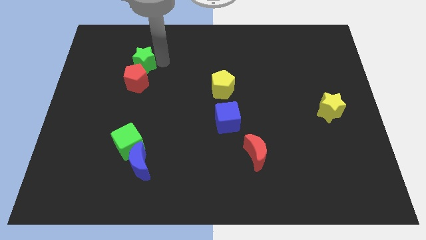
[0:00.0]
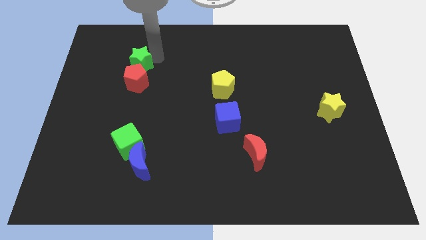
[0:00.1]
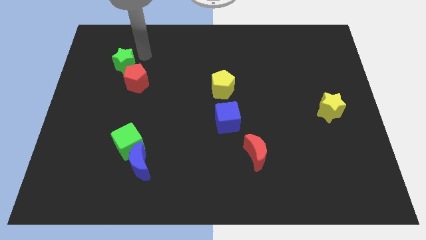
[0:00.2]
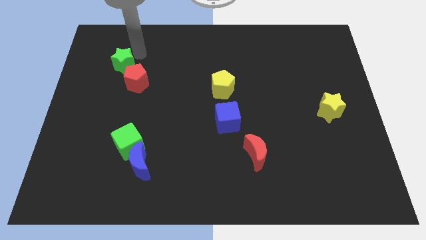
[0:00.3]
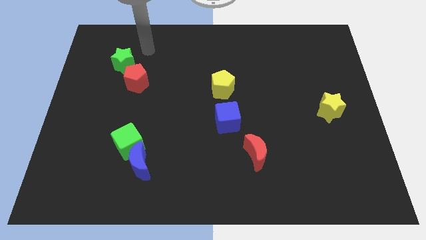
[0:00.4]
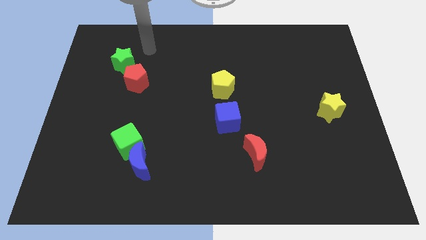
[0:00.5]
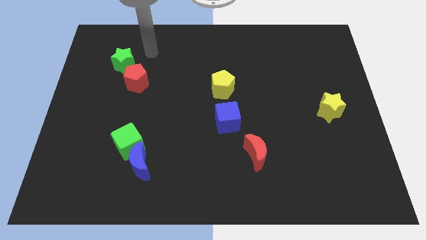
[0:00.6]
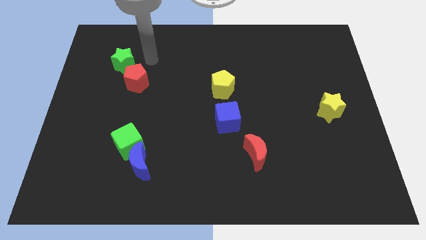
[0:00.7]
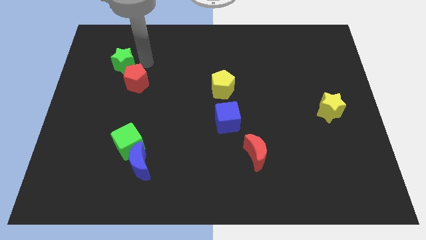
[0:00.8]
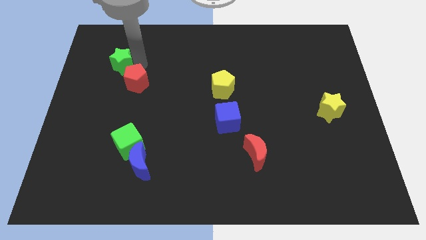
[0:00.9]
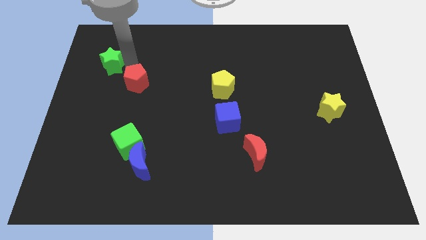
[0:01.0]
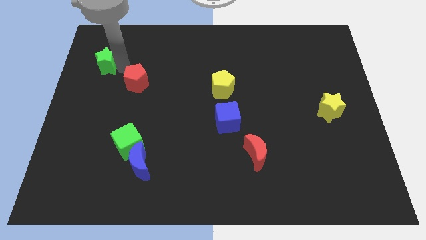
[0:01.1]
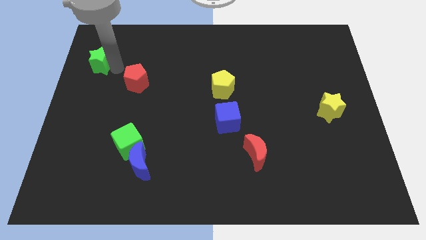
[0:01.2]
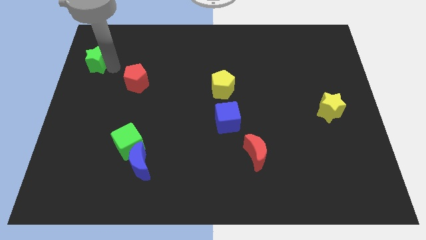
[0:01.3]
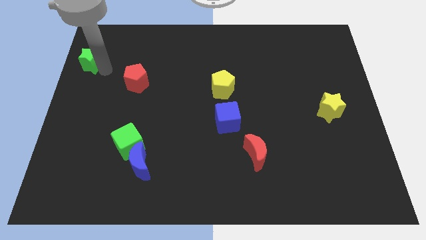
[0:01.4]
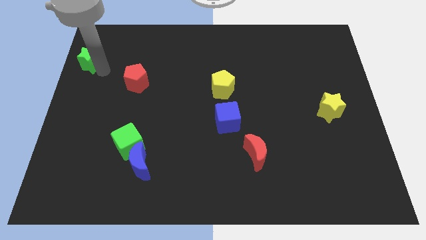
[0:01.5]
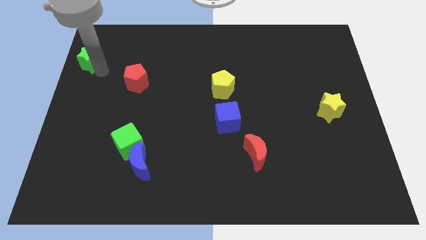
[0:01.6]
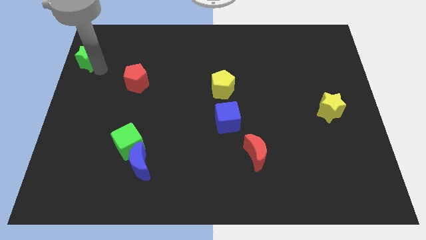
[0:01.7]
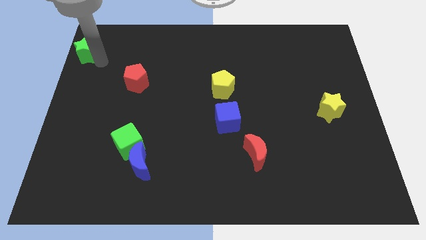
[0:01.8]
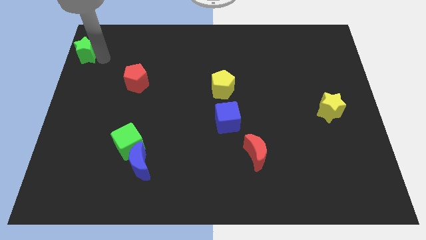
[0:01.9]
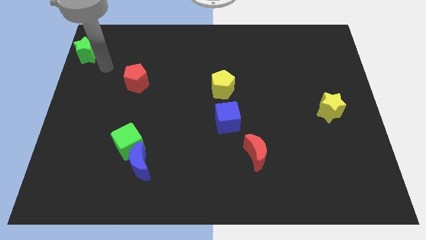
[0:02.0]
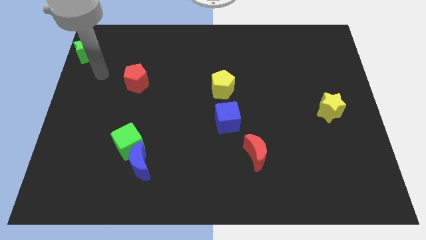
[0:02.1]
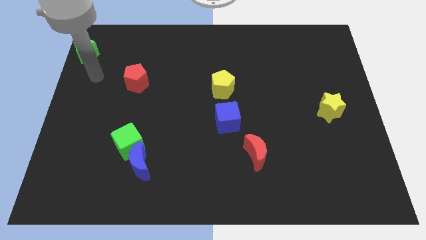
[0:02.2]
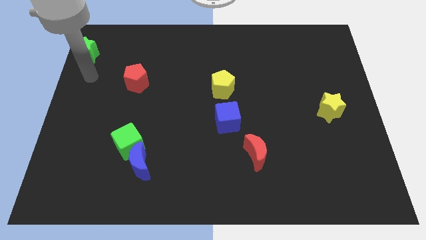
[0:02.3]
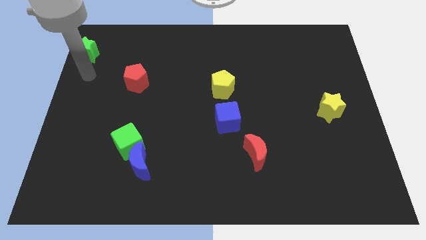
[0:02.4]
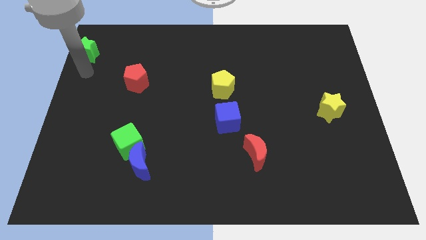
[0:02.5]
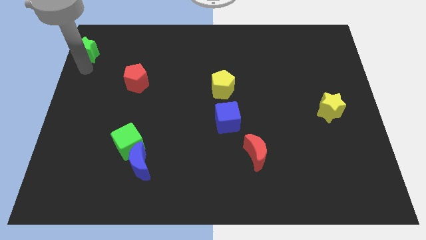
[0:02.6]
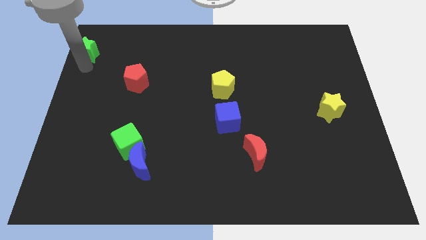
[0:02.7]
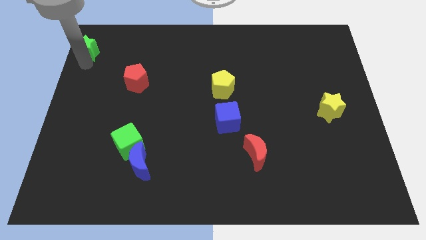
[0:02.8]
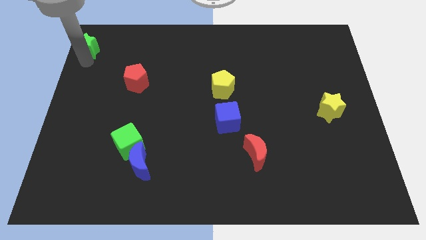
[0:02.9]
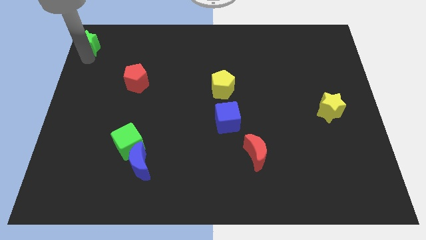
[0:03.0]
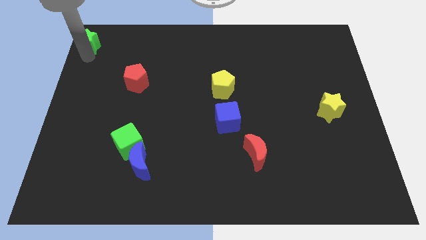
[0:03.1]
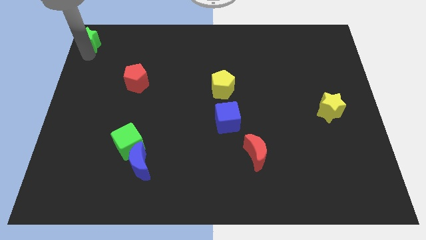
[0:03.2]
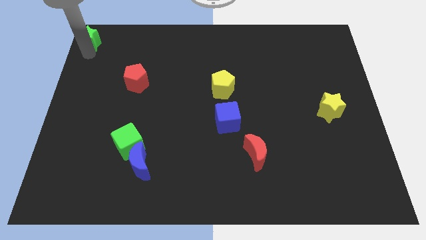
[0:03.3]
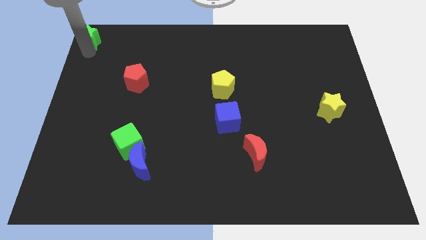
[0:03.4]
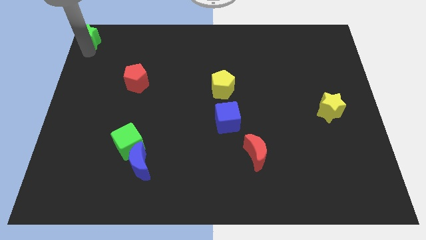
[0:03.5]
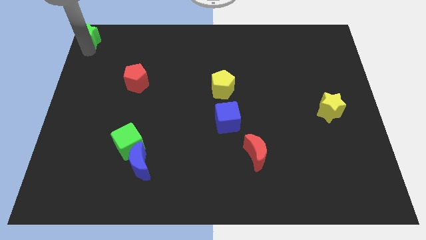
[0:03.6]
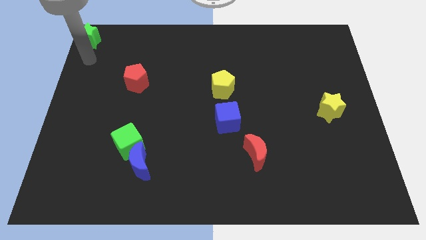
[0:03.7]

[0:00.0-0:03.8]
place the green star at the top left side of the board

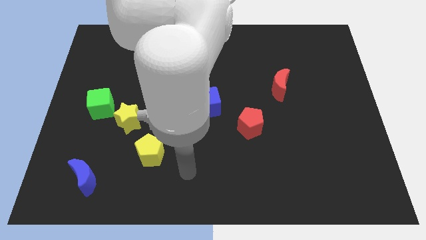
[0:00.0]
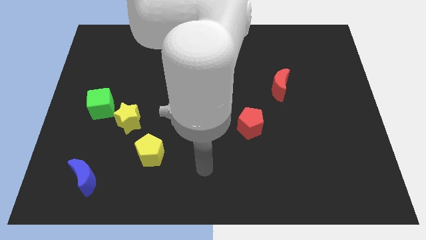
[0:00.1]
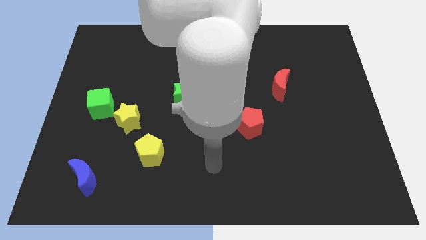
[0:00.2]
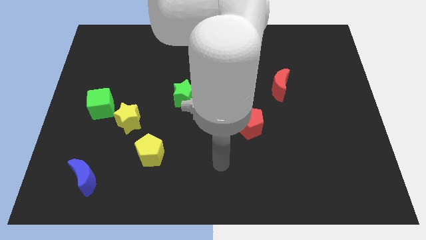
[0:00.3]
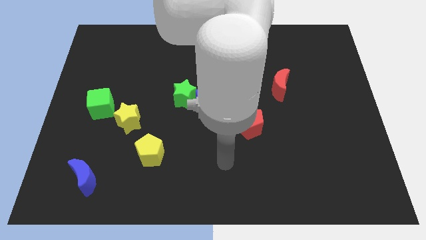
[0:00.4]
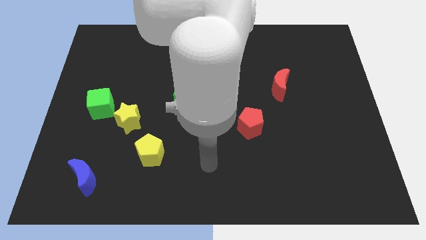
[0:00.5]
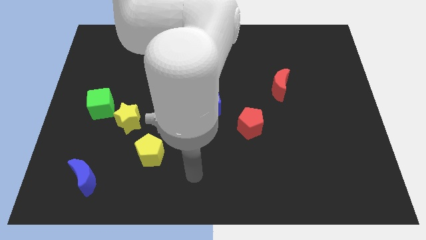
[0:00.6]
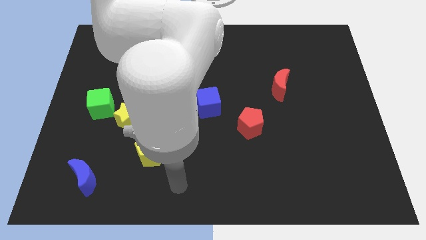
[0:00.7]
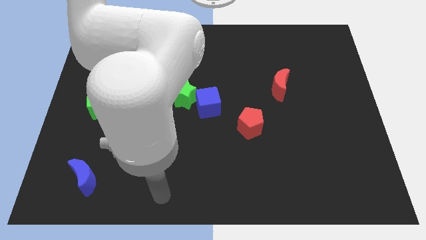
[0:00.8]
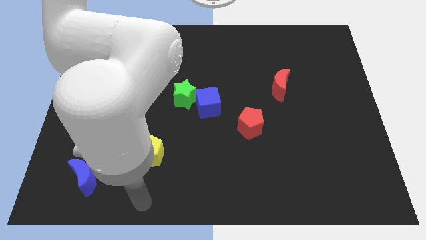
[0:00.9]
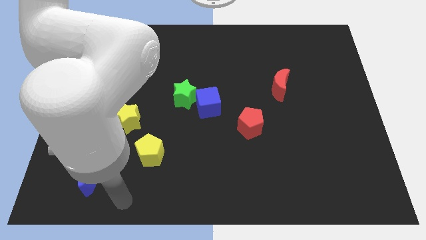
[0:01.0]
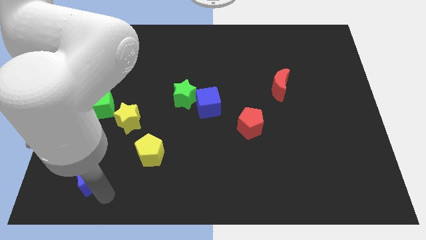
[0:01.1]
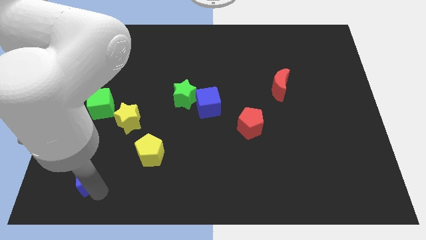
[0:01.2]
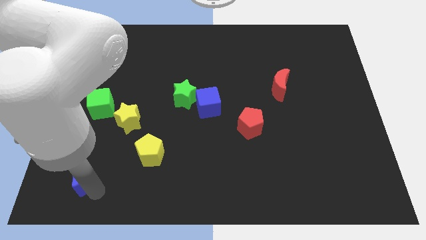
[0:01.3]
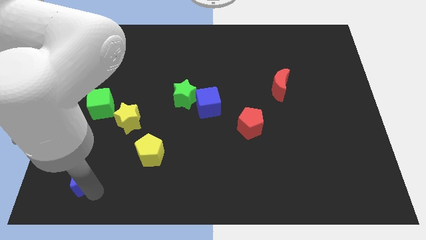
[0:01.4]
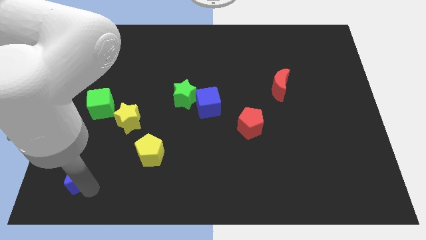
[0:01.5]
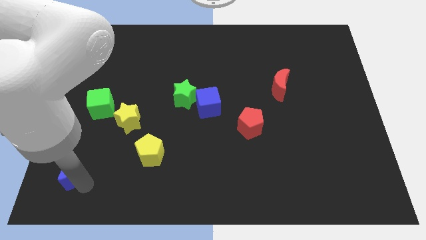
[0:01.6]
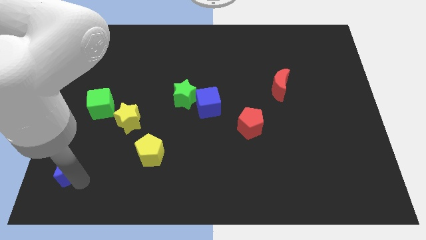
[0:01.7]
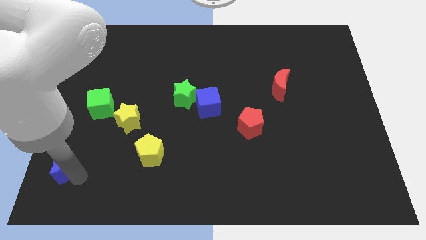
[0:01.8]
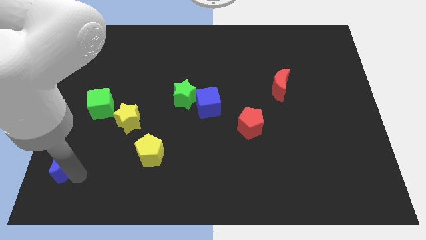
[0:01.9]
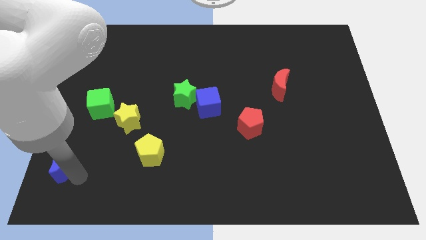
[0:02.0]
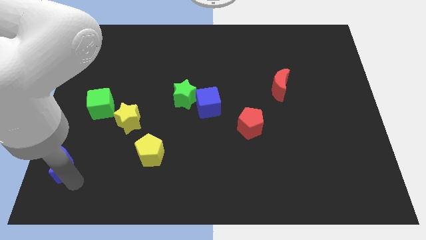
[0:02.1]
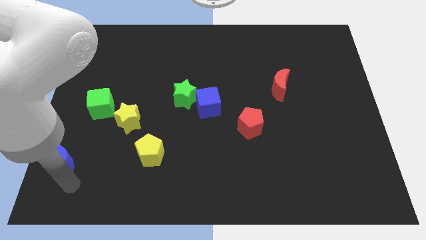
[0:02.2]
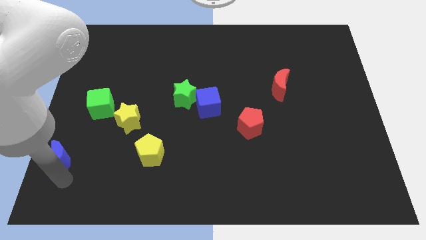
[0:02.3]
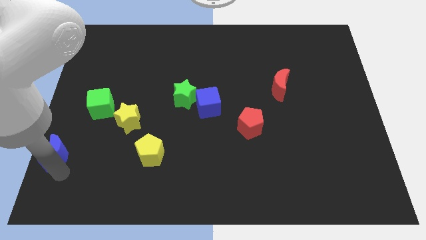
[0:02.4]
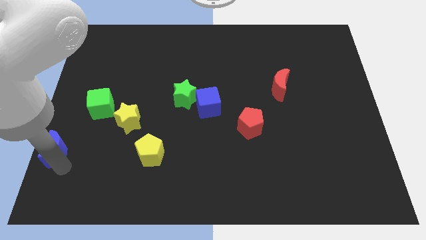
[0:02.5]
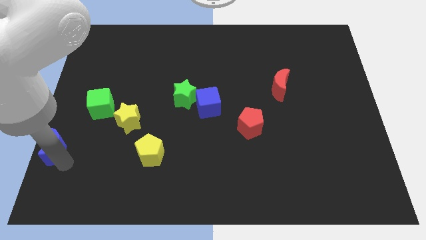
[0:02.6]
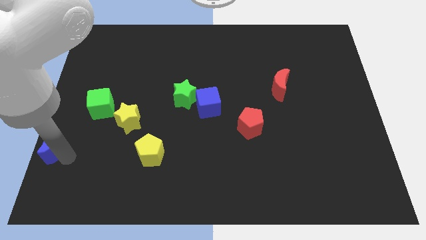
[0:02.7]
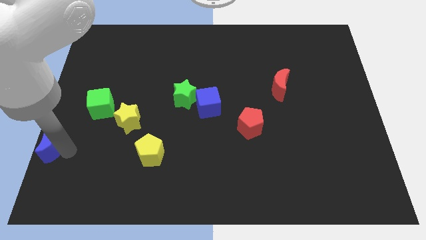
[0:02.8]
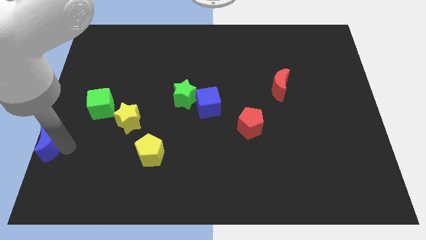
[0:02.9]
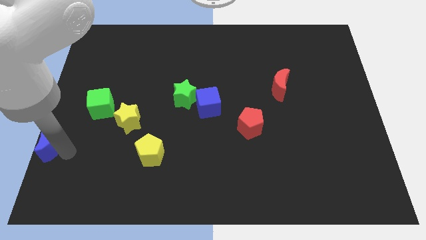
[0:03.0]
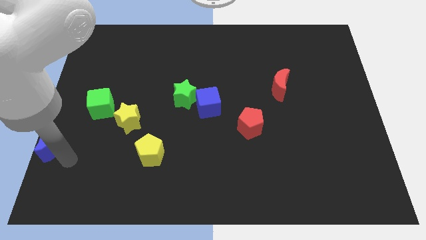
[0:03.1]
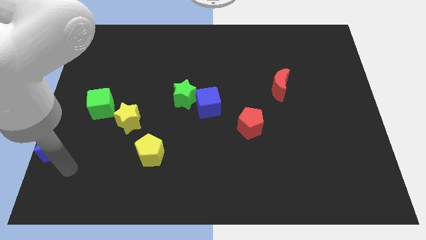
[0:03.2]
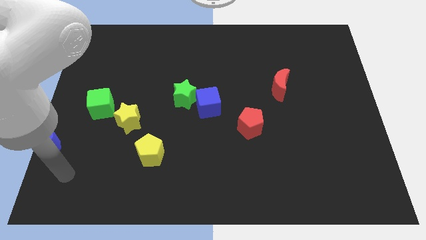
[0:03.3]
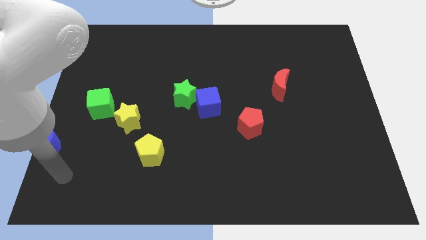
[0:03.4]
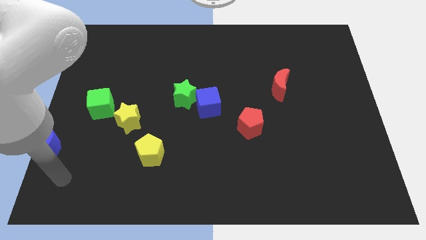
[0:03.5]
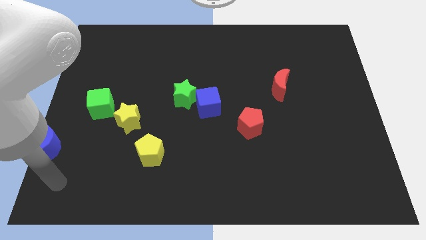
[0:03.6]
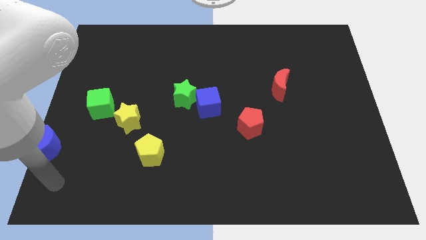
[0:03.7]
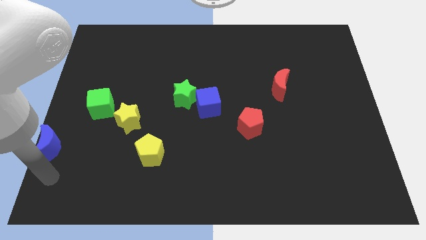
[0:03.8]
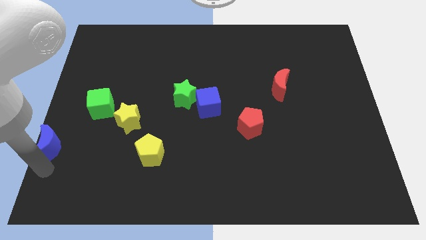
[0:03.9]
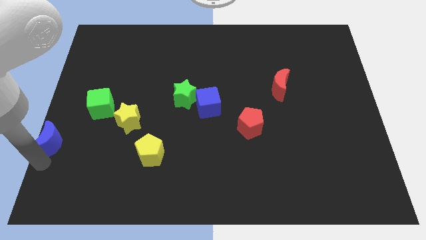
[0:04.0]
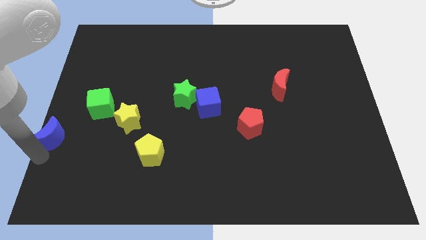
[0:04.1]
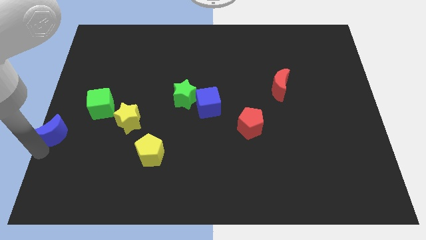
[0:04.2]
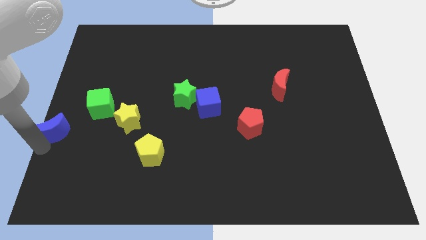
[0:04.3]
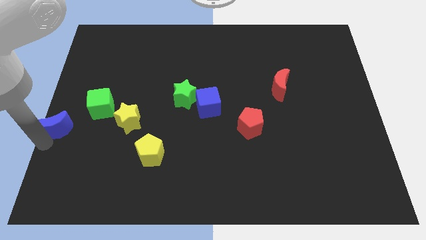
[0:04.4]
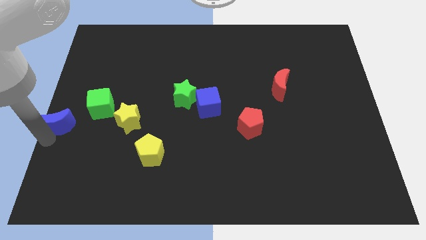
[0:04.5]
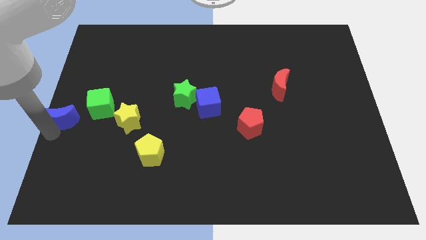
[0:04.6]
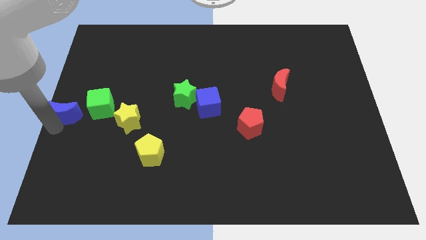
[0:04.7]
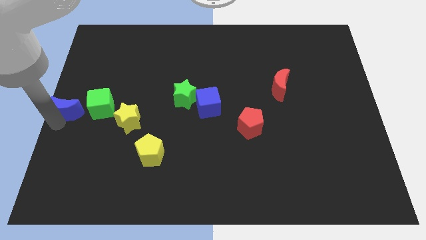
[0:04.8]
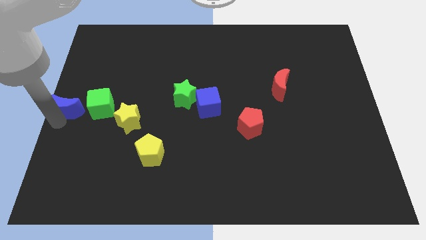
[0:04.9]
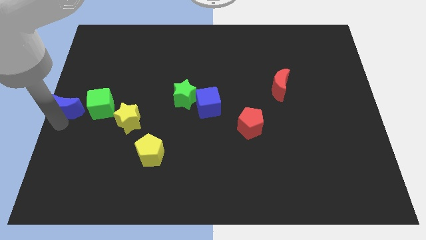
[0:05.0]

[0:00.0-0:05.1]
place the blue moon to the left center corner

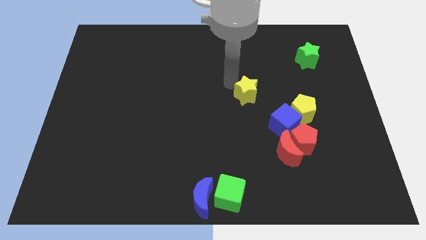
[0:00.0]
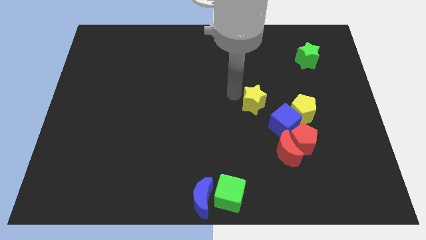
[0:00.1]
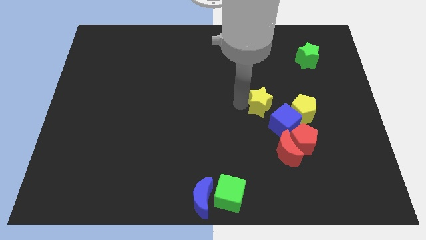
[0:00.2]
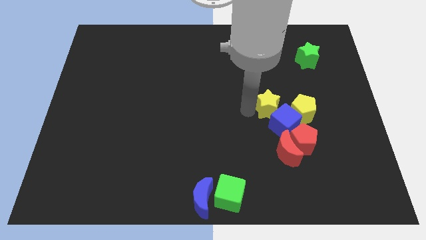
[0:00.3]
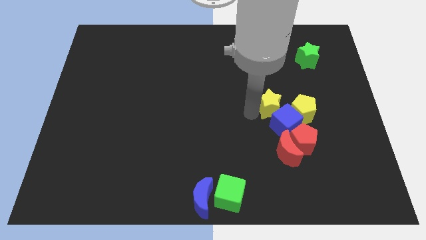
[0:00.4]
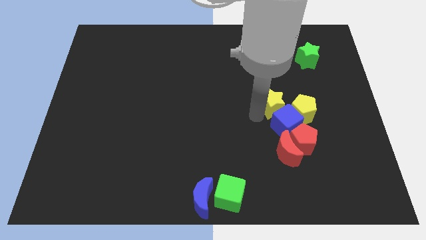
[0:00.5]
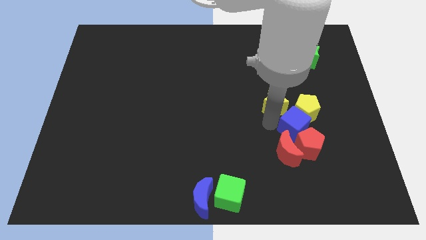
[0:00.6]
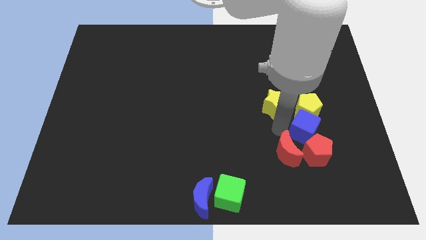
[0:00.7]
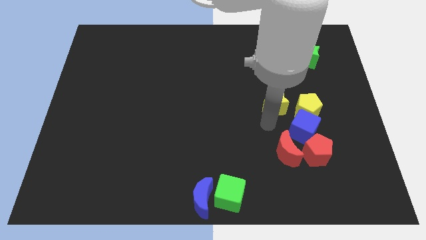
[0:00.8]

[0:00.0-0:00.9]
push the yellow star into the group of blocks
